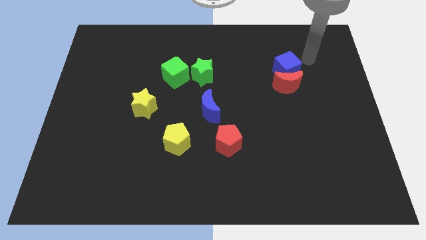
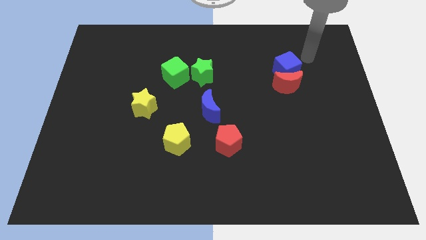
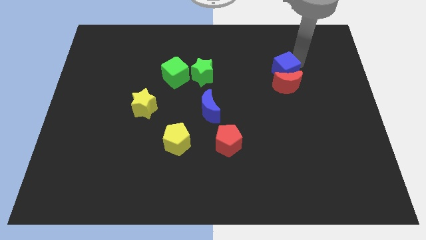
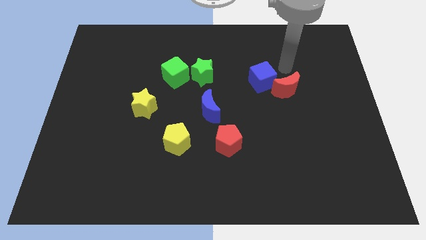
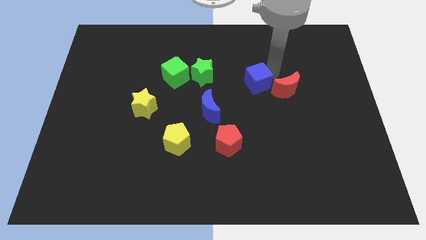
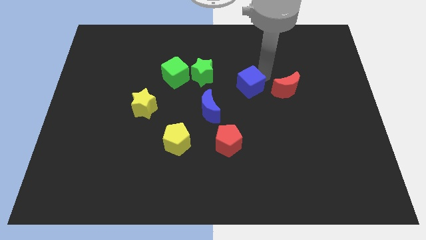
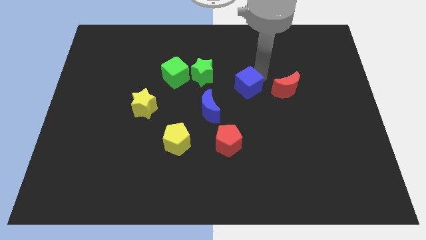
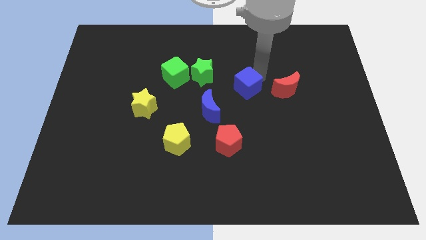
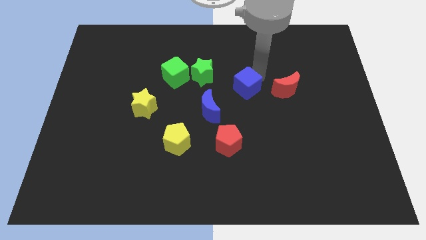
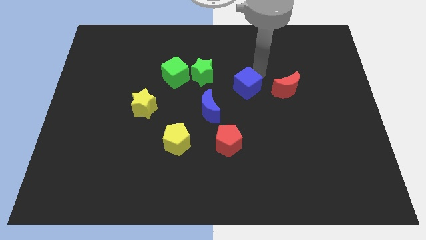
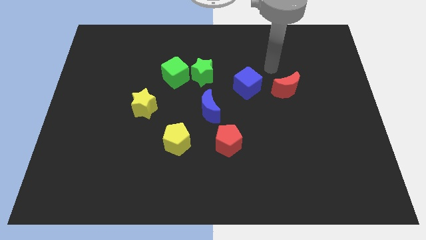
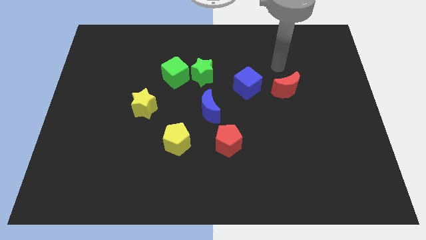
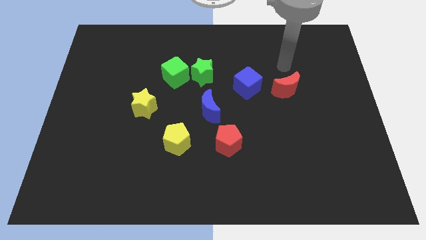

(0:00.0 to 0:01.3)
place blue cube to the left side of the red crescent

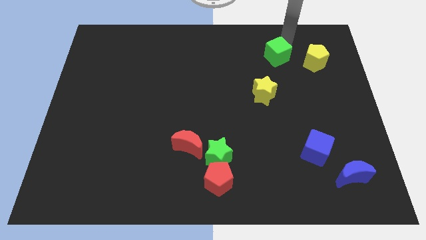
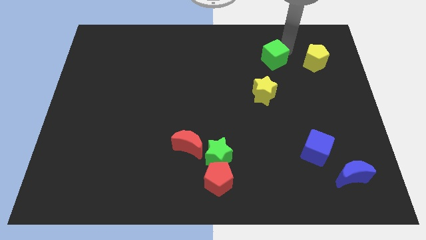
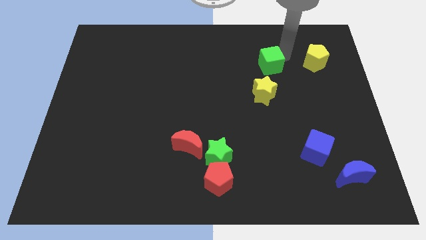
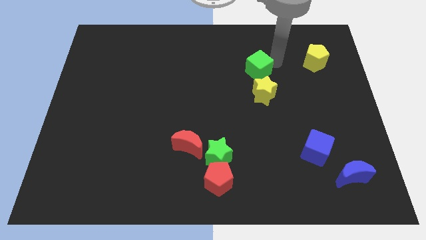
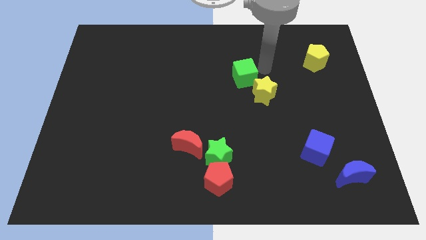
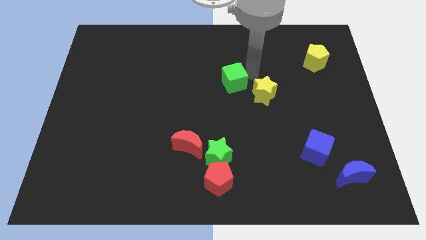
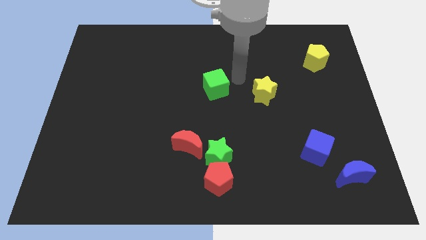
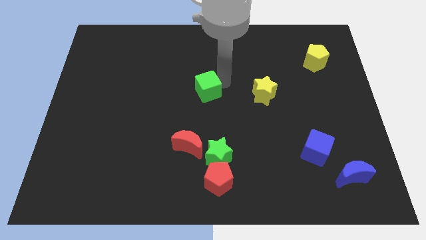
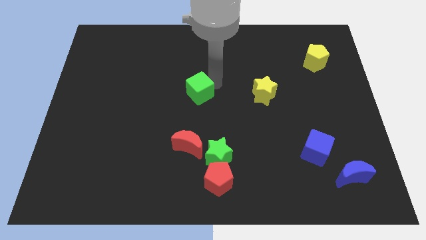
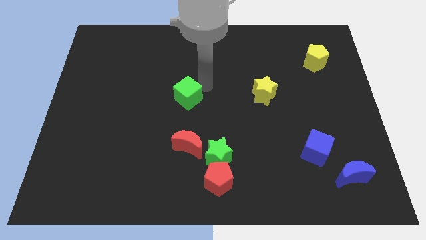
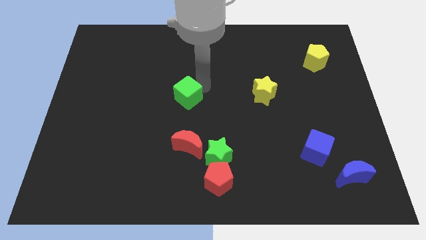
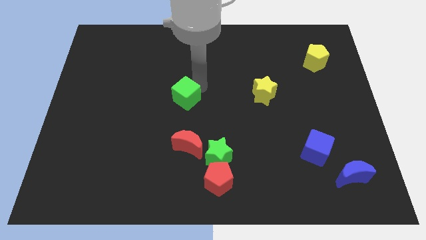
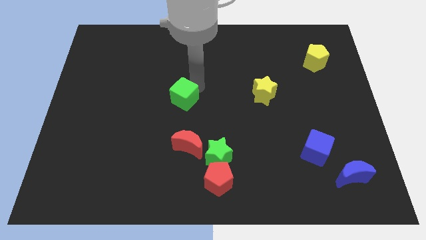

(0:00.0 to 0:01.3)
push the green cube to the center of the board

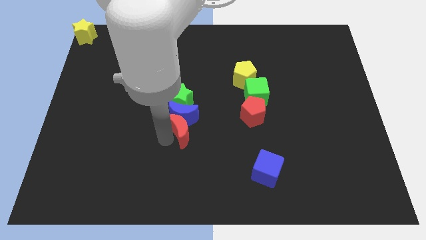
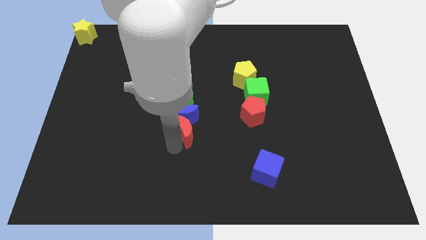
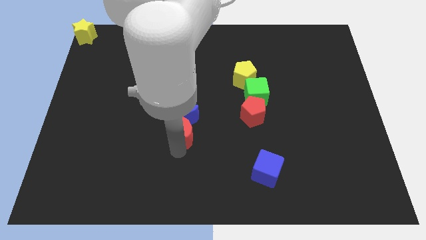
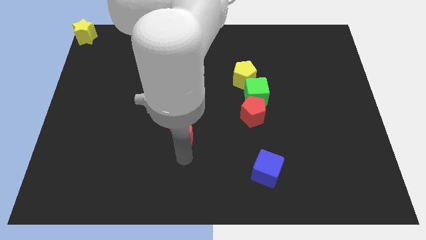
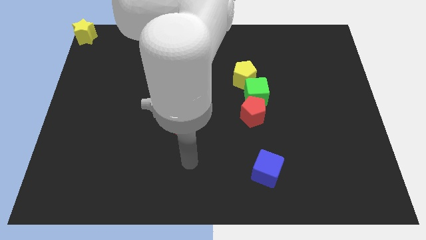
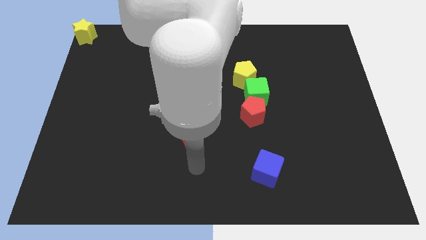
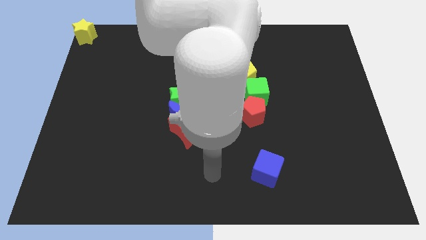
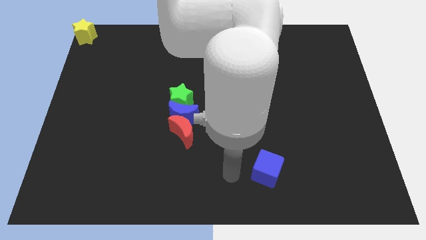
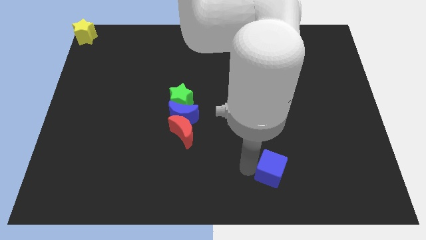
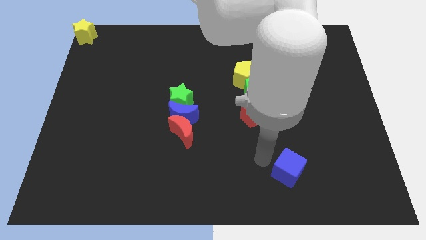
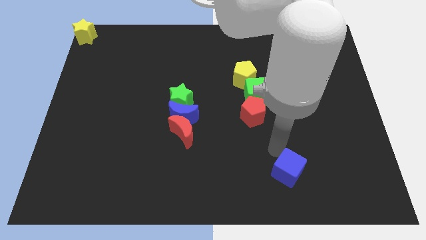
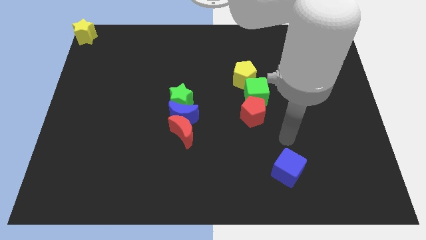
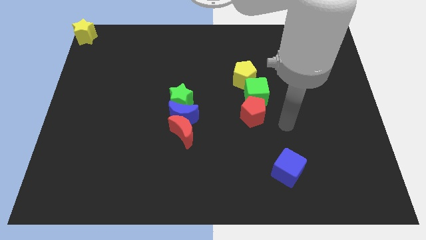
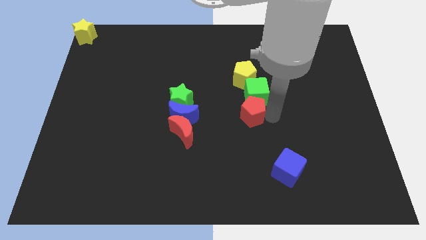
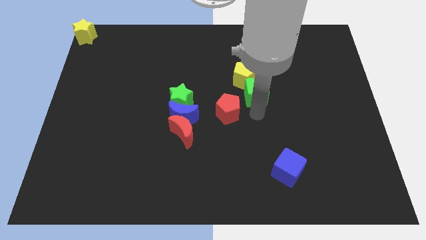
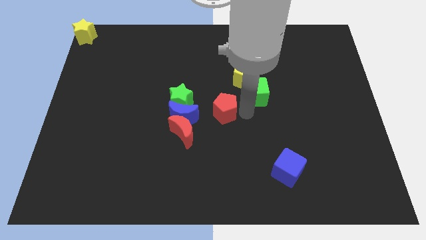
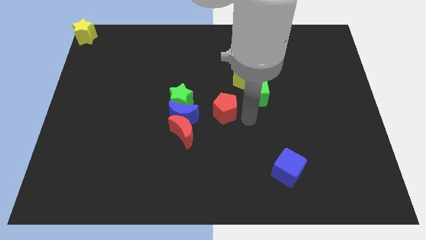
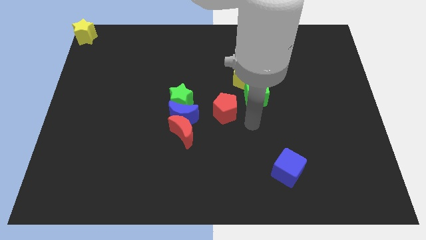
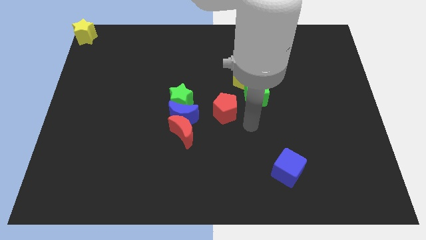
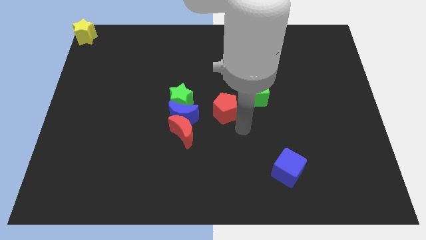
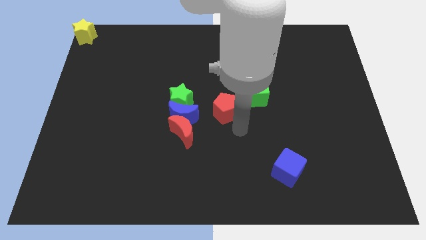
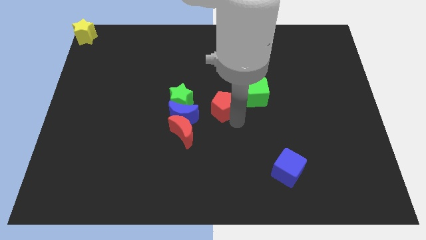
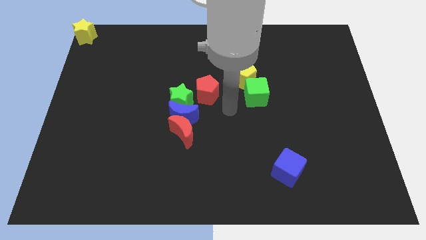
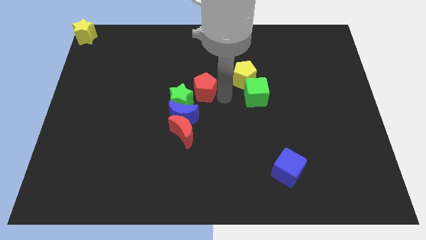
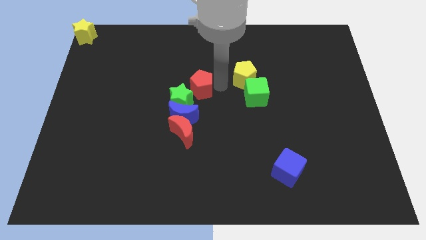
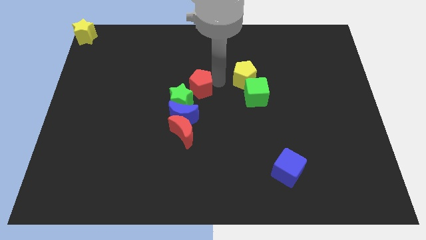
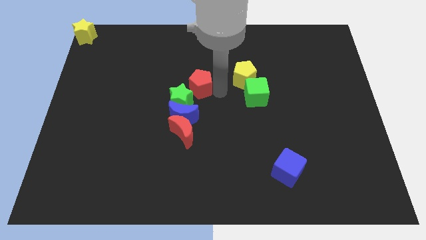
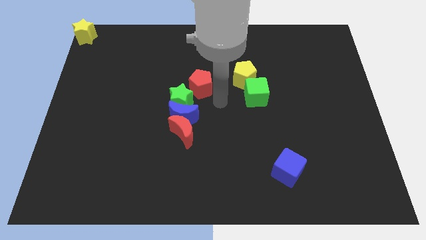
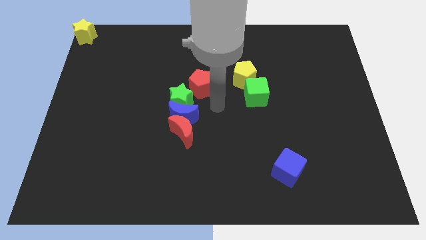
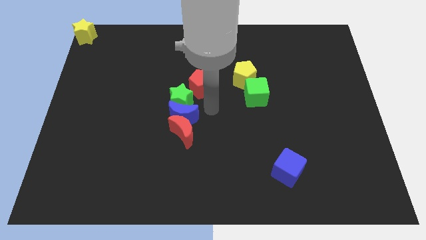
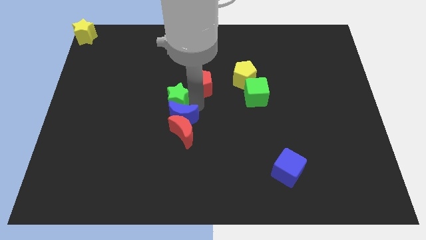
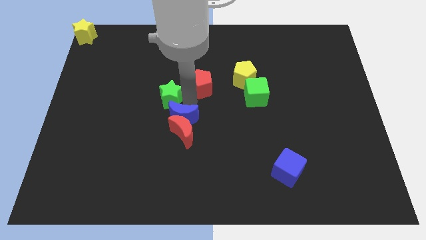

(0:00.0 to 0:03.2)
move the blue cube and the red pentagon diagonal to each other

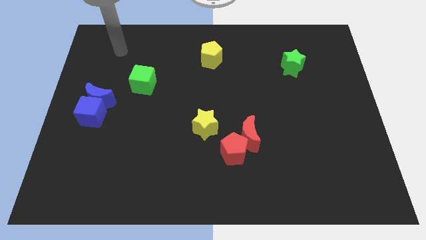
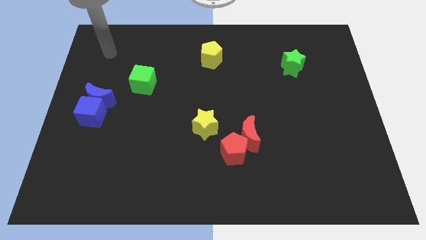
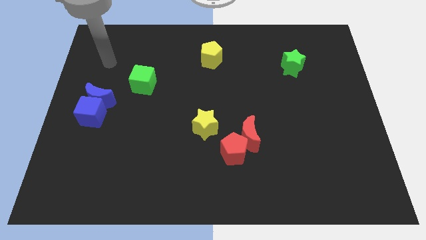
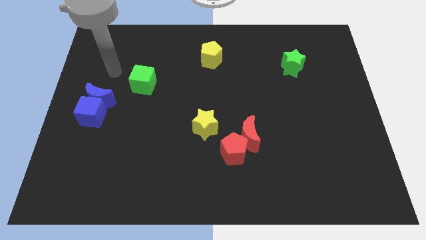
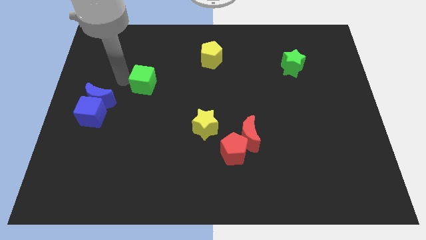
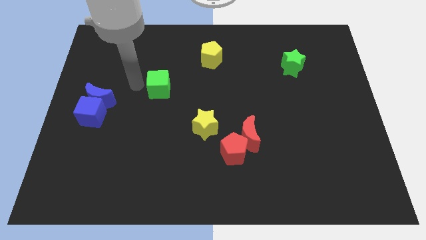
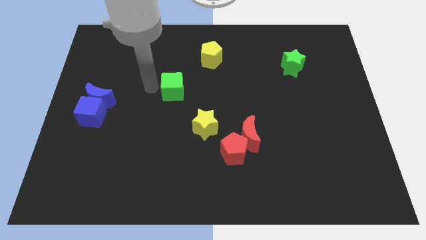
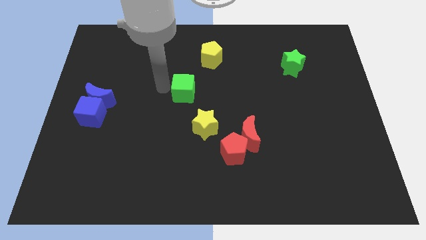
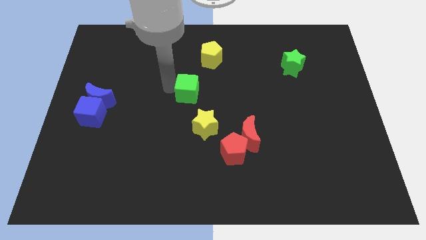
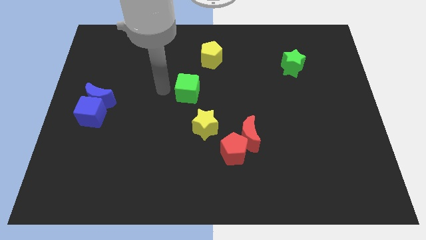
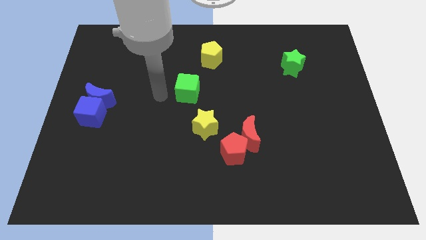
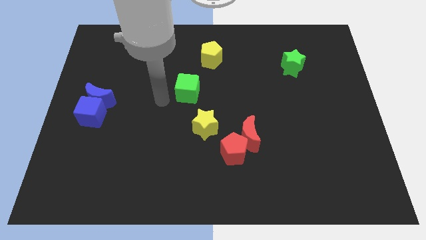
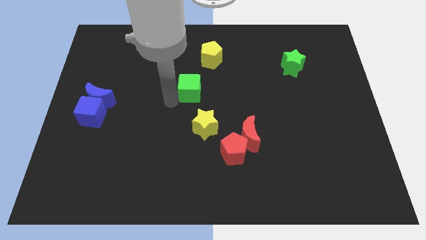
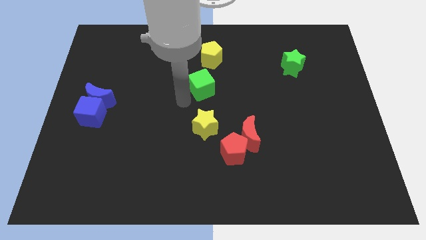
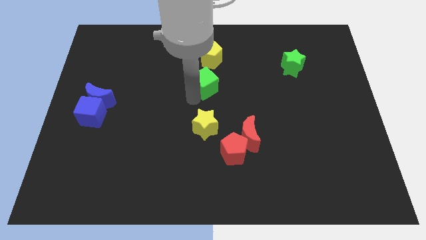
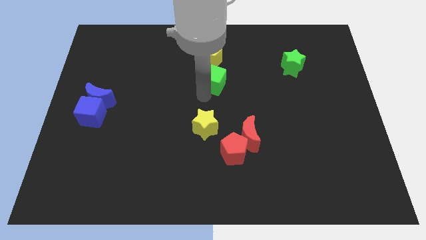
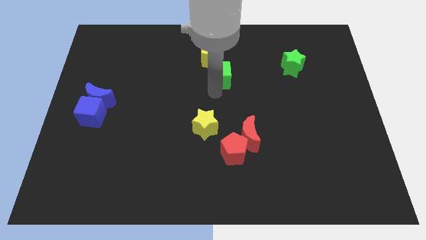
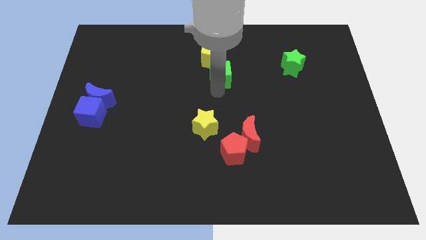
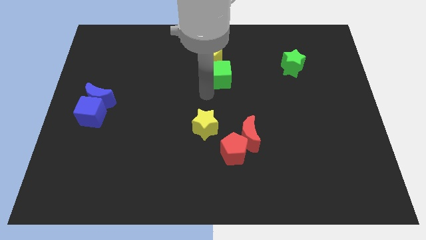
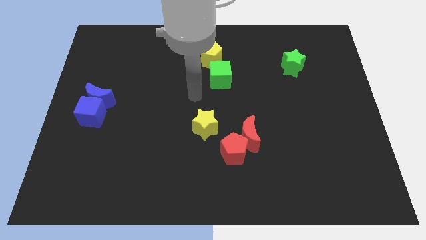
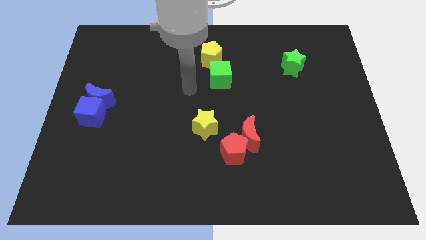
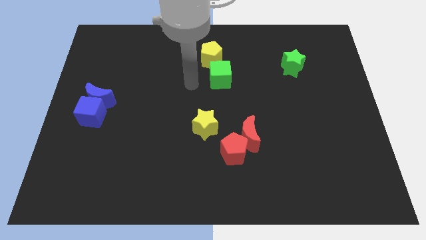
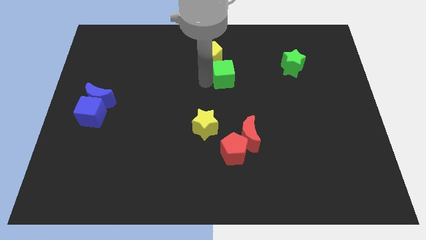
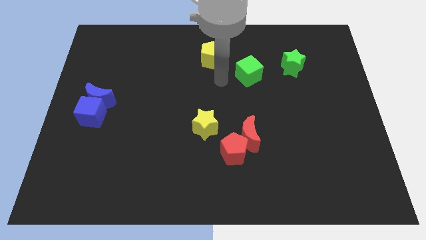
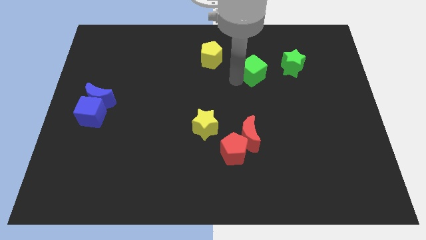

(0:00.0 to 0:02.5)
place the green cube vertically above the red crescent

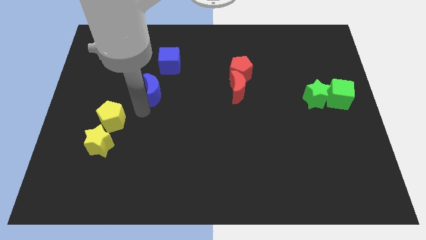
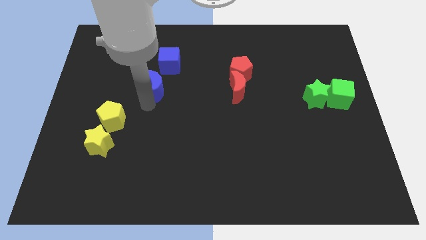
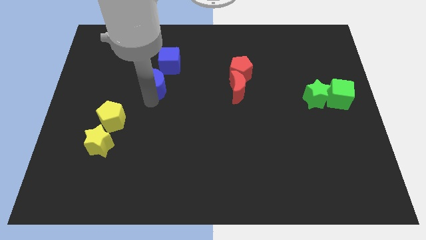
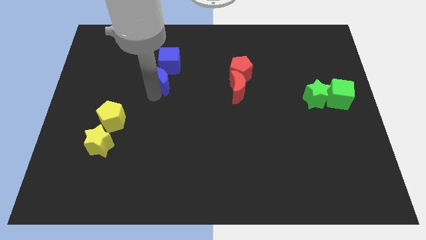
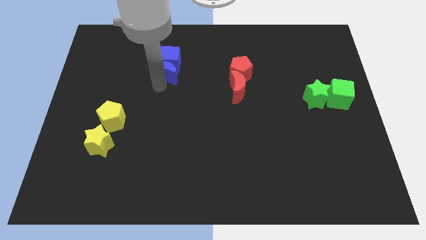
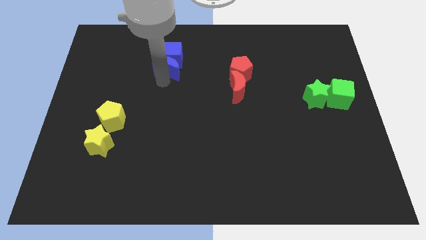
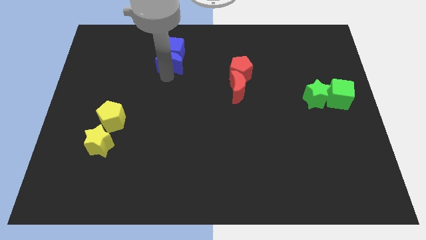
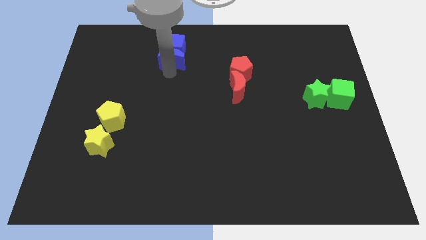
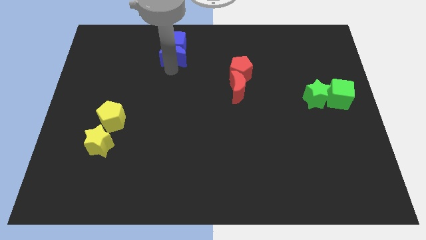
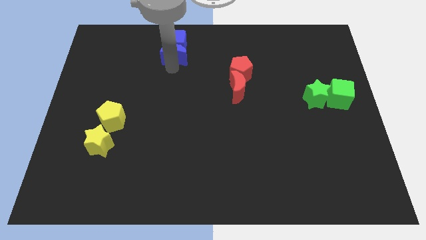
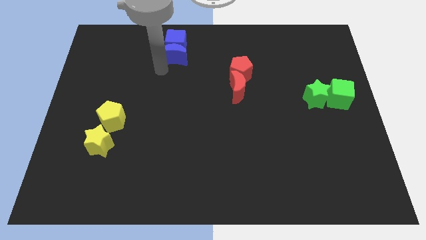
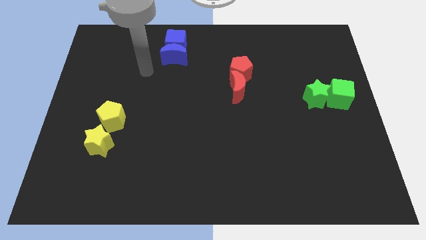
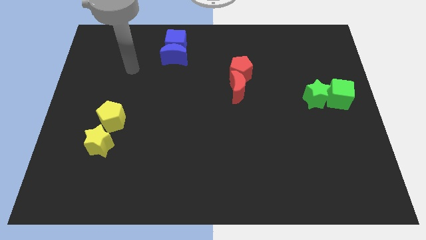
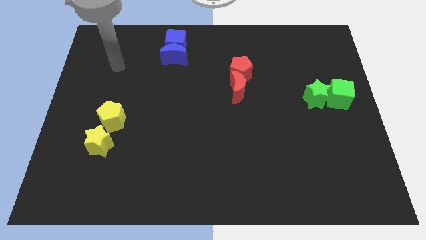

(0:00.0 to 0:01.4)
move the blue blocks to the top of the board
